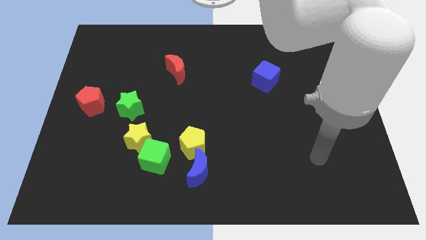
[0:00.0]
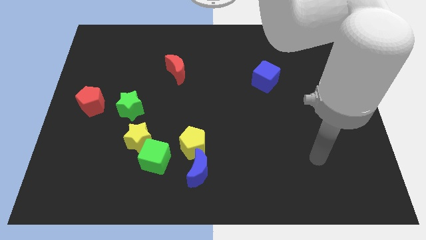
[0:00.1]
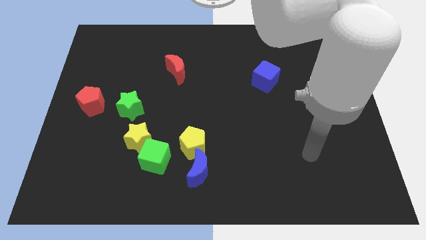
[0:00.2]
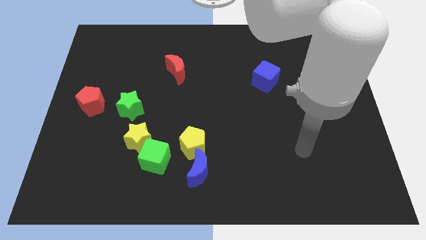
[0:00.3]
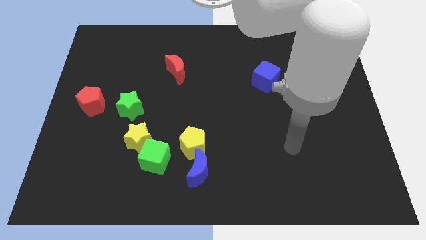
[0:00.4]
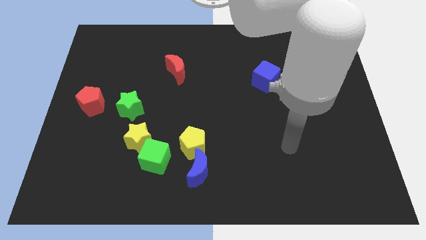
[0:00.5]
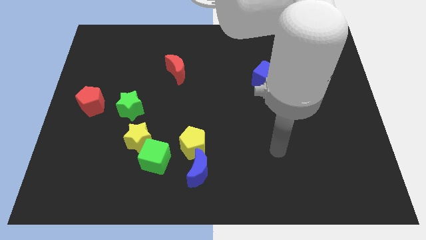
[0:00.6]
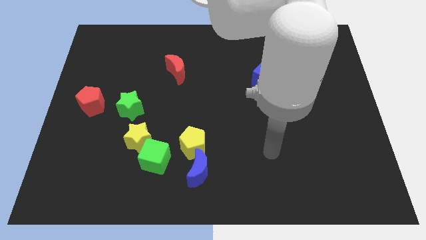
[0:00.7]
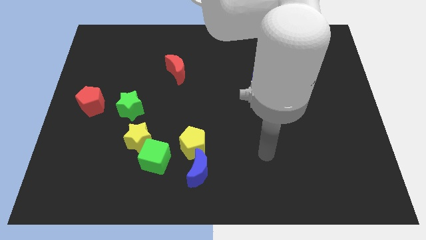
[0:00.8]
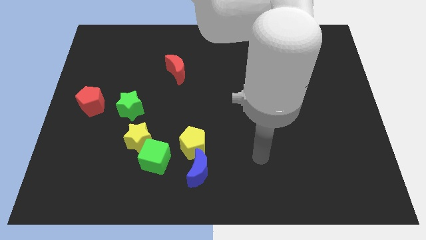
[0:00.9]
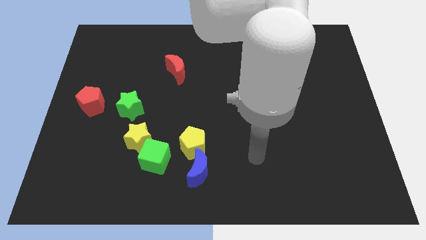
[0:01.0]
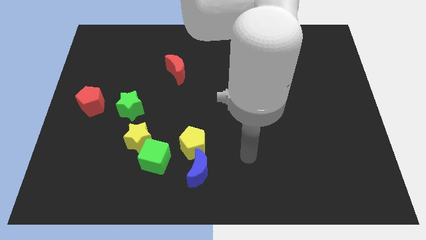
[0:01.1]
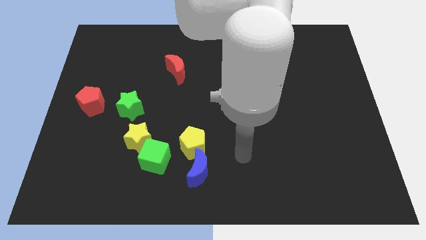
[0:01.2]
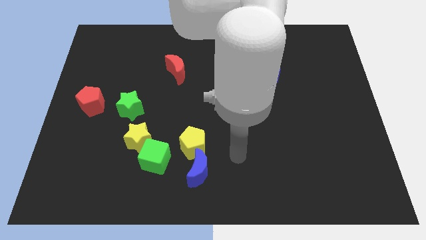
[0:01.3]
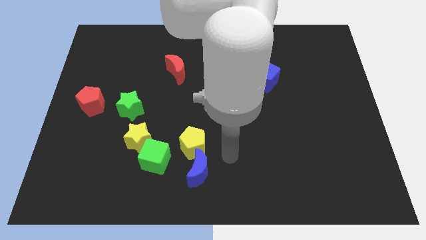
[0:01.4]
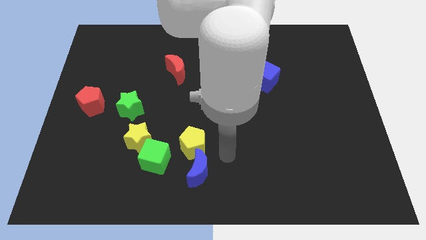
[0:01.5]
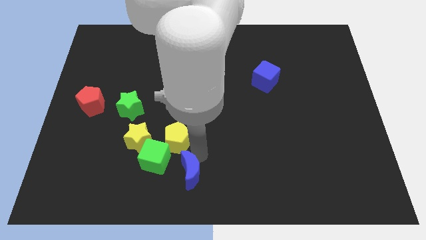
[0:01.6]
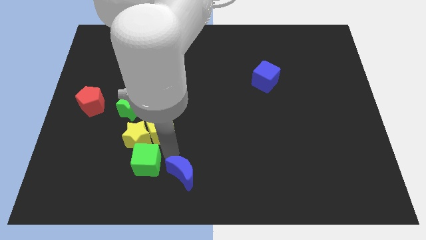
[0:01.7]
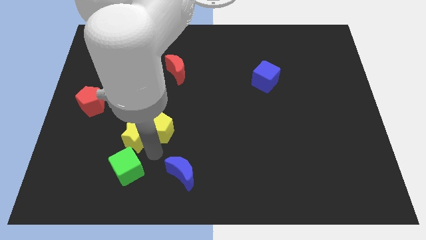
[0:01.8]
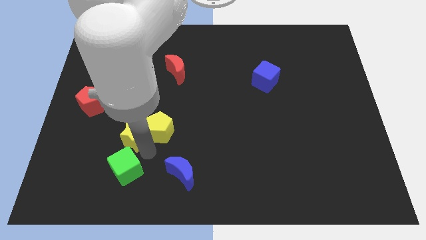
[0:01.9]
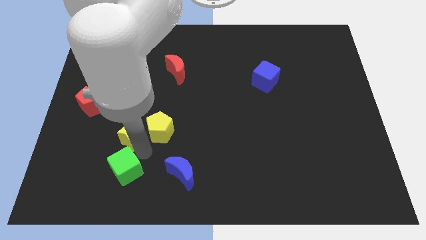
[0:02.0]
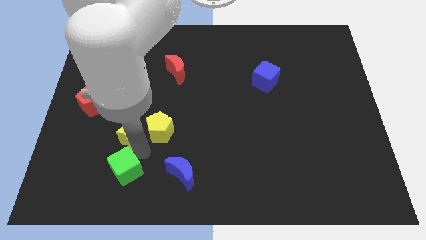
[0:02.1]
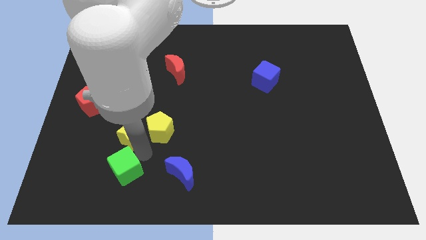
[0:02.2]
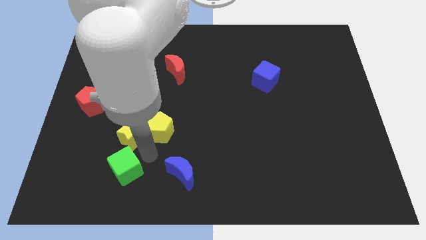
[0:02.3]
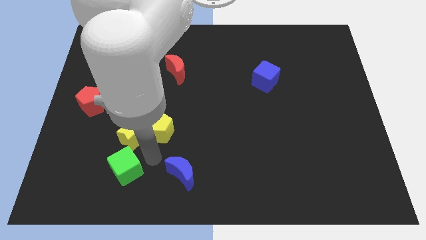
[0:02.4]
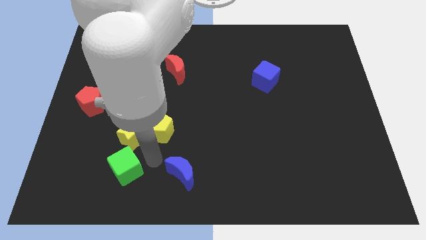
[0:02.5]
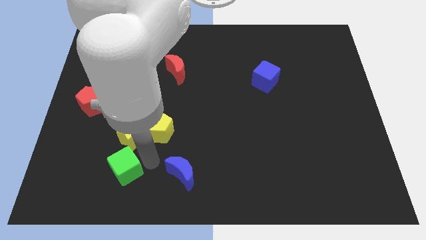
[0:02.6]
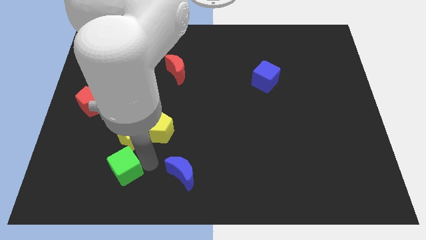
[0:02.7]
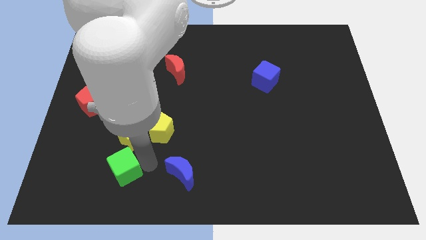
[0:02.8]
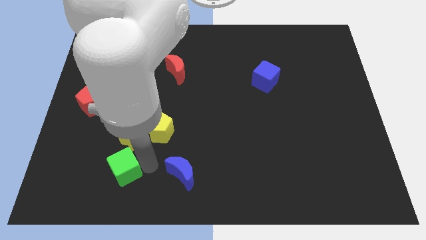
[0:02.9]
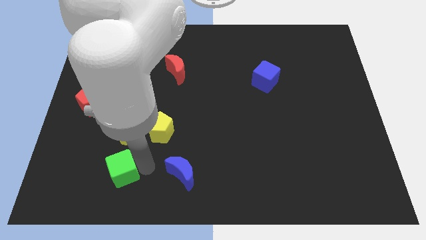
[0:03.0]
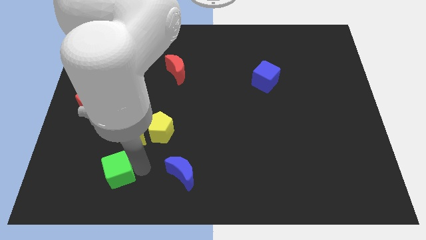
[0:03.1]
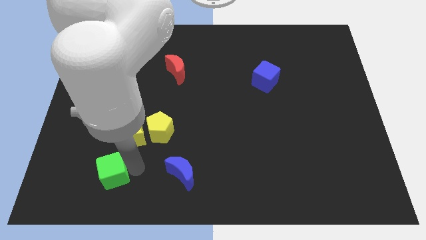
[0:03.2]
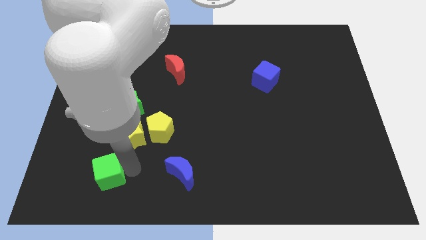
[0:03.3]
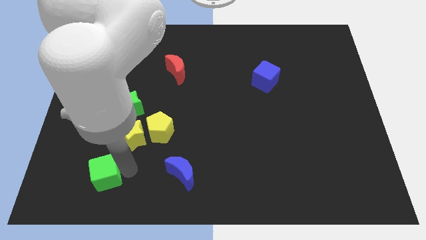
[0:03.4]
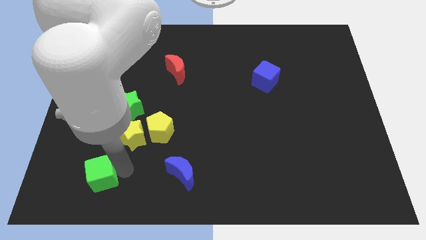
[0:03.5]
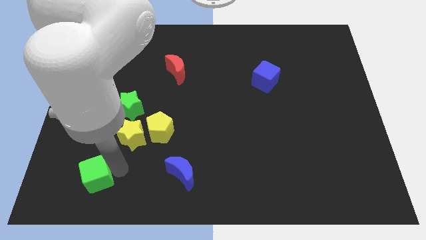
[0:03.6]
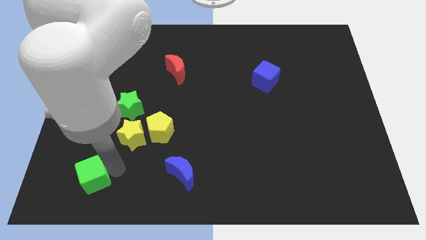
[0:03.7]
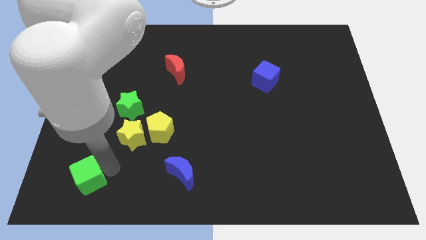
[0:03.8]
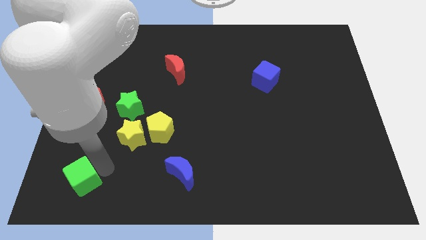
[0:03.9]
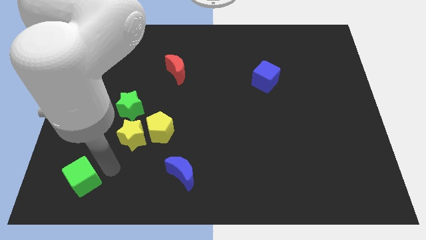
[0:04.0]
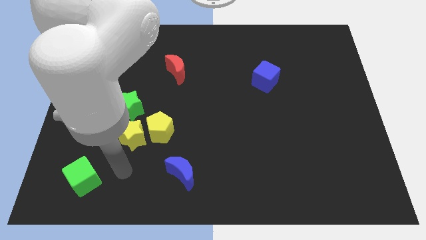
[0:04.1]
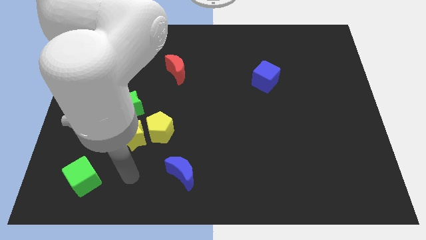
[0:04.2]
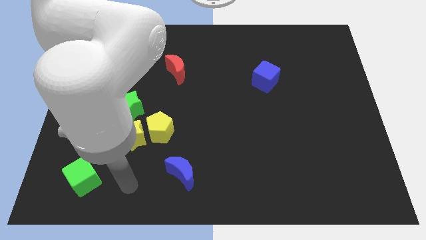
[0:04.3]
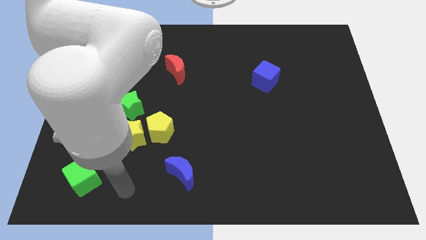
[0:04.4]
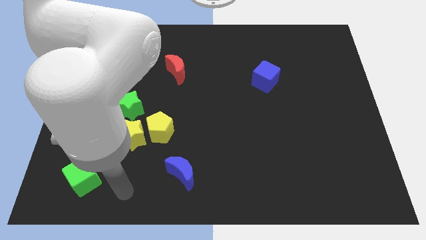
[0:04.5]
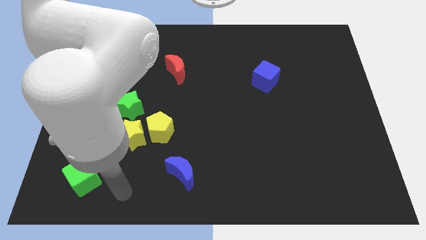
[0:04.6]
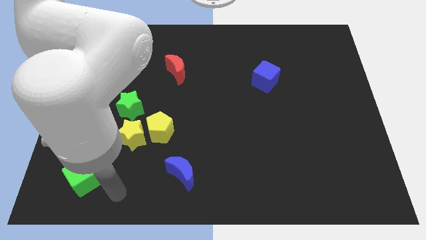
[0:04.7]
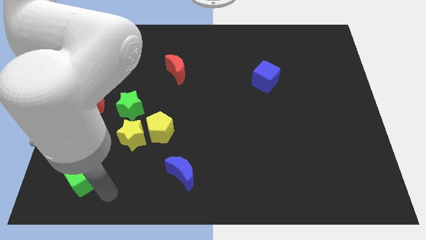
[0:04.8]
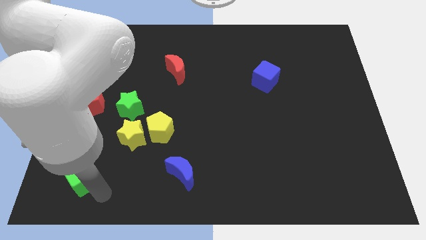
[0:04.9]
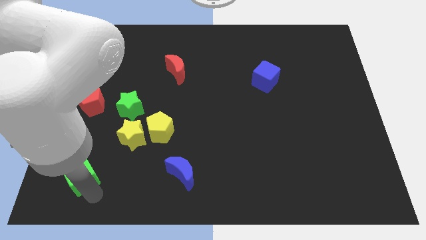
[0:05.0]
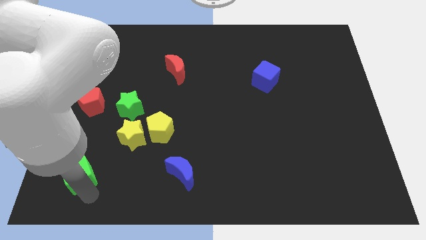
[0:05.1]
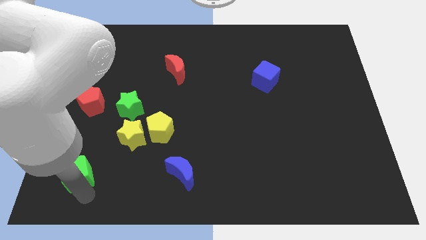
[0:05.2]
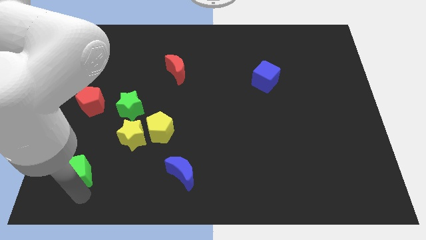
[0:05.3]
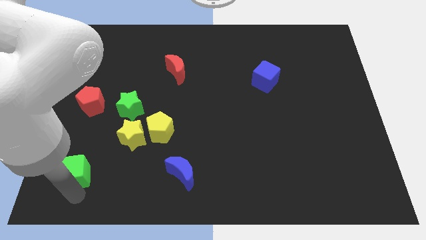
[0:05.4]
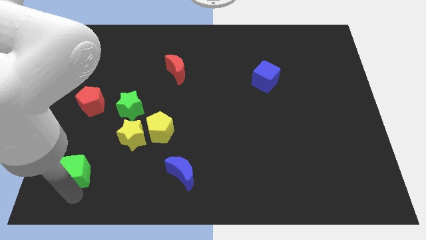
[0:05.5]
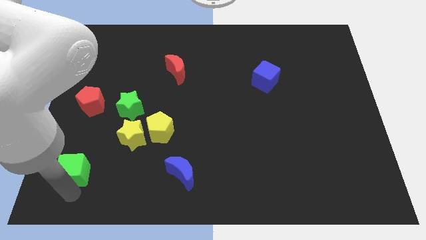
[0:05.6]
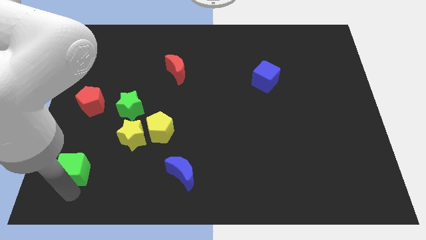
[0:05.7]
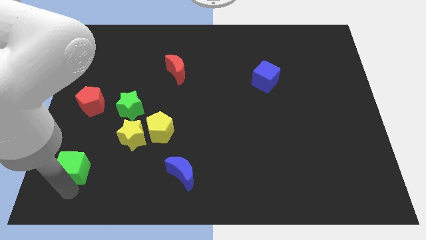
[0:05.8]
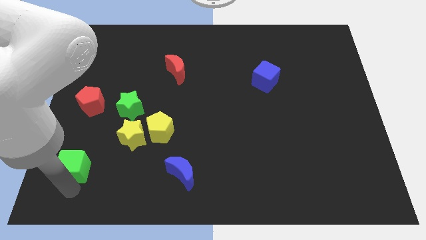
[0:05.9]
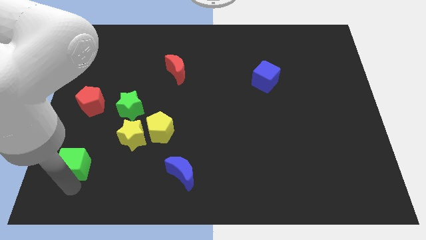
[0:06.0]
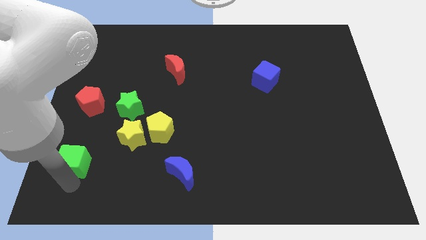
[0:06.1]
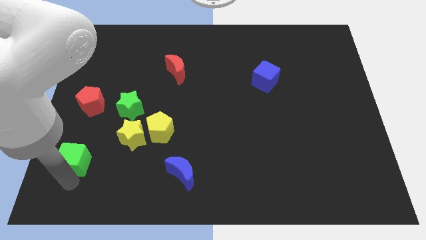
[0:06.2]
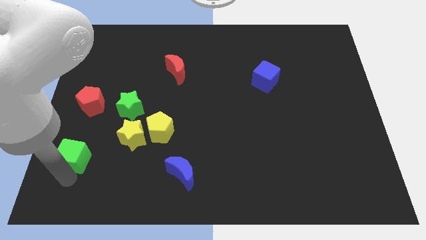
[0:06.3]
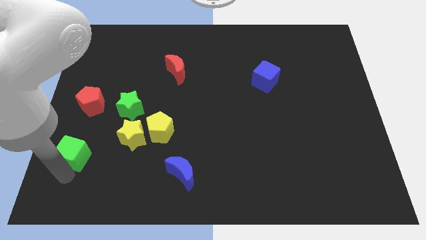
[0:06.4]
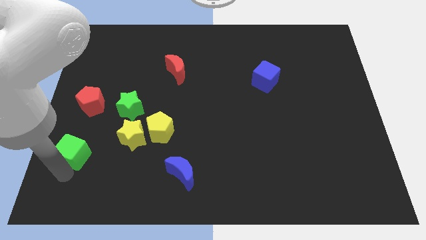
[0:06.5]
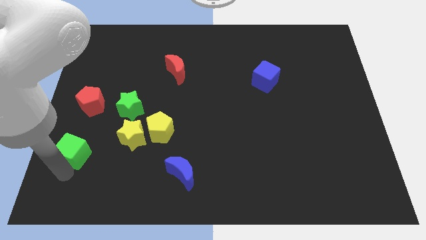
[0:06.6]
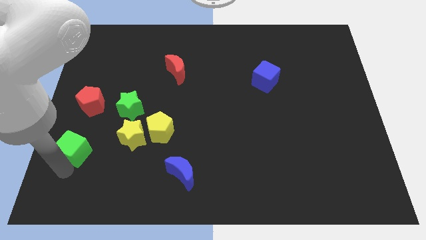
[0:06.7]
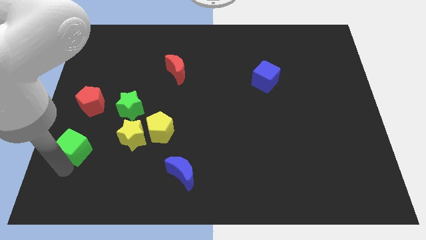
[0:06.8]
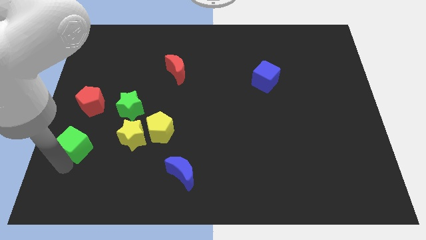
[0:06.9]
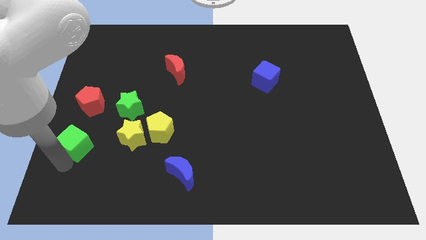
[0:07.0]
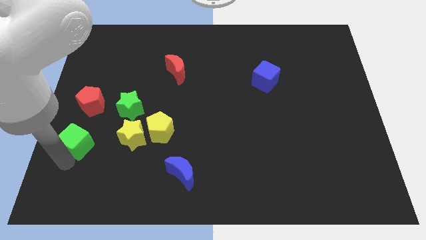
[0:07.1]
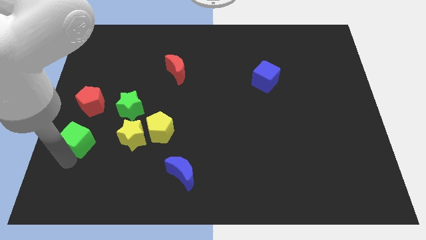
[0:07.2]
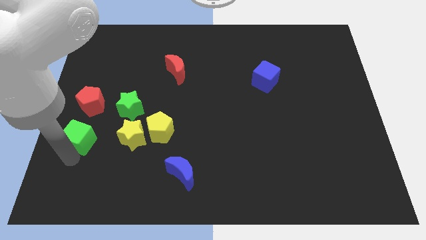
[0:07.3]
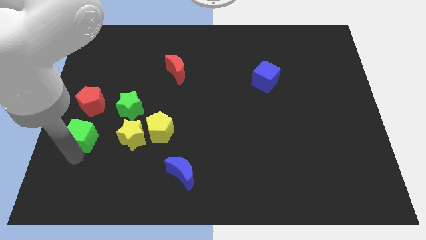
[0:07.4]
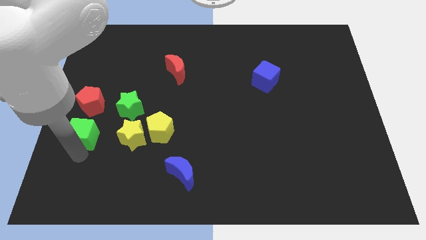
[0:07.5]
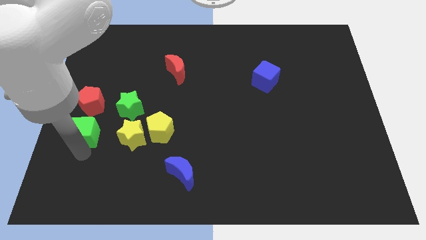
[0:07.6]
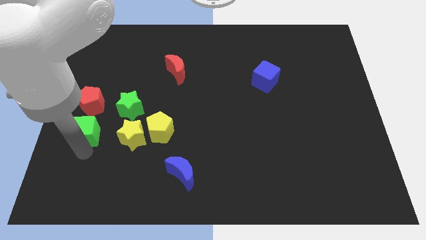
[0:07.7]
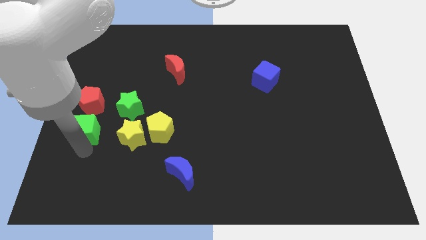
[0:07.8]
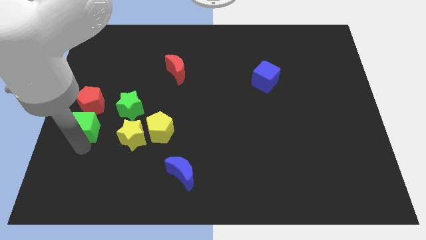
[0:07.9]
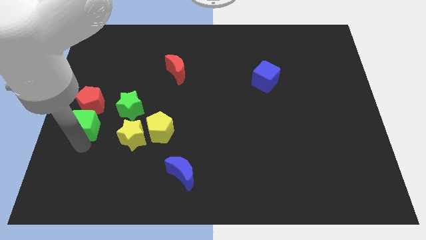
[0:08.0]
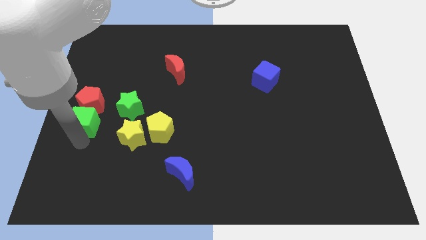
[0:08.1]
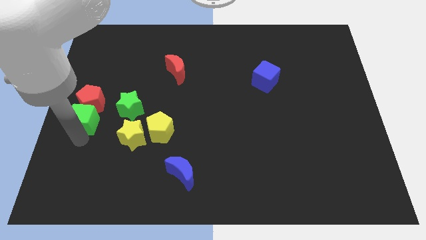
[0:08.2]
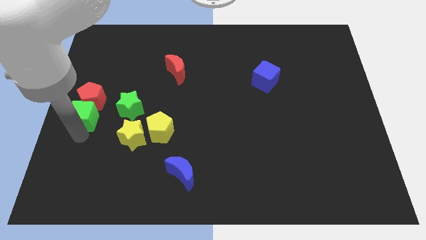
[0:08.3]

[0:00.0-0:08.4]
move the green cube next to the red pentagon

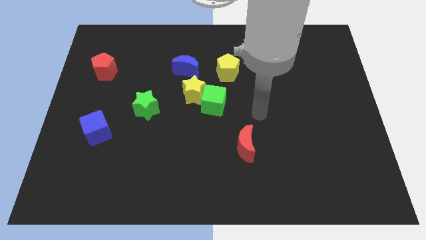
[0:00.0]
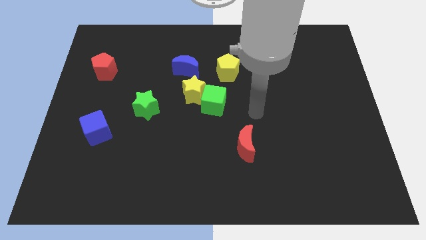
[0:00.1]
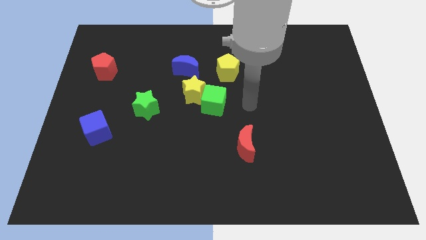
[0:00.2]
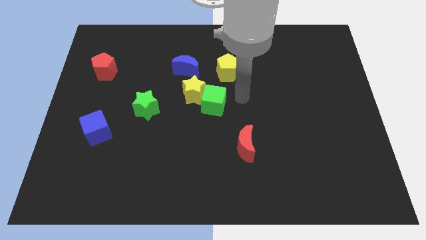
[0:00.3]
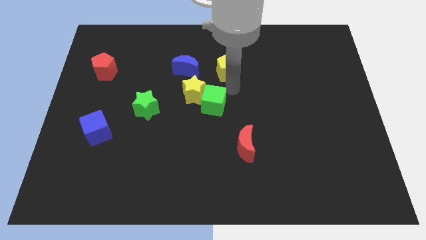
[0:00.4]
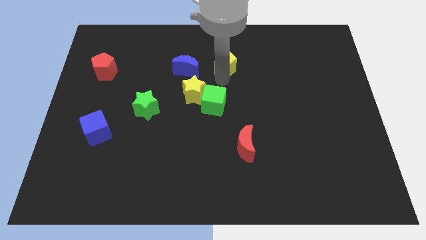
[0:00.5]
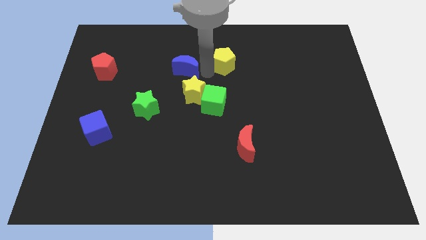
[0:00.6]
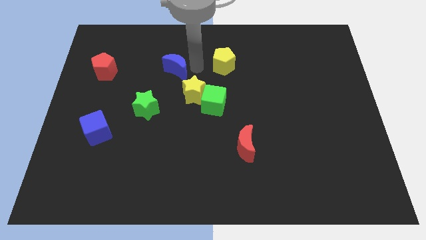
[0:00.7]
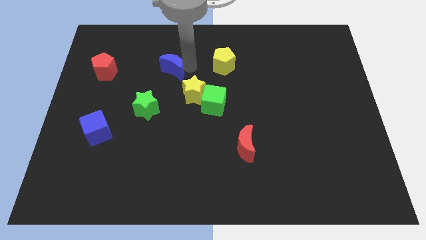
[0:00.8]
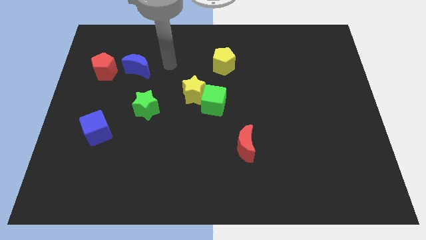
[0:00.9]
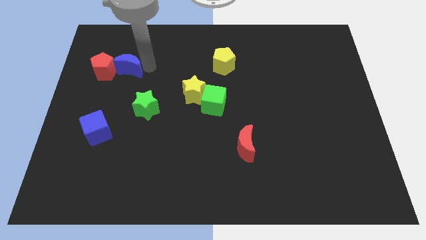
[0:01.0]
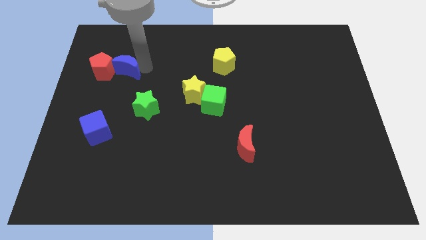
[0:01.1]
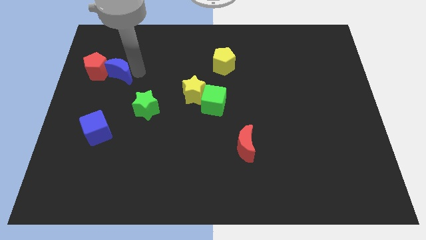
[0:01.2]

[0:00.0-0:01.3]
move the blue moon next to the red pentagon
